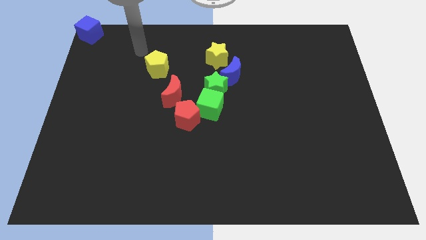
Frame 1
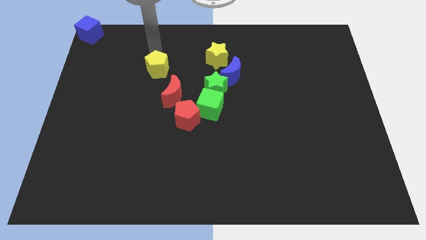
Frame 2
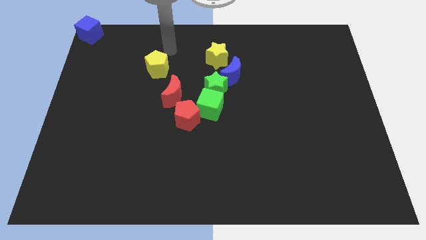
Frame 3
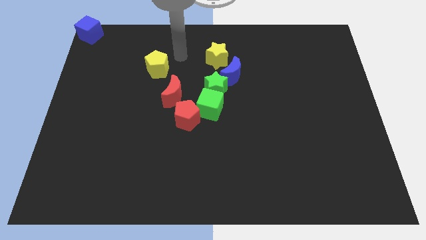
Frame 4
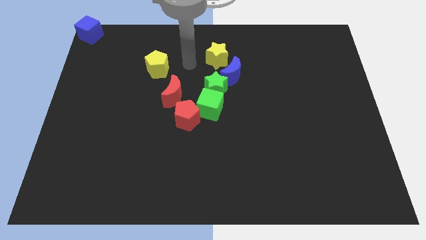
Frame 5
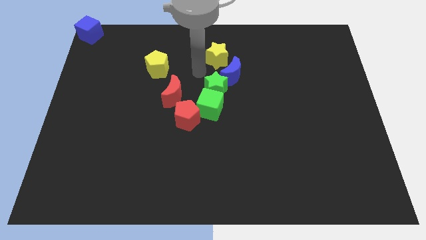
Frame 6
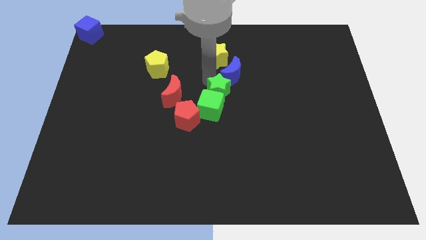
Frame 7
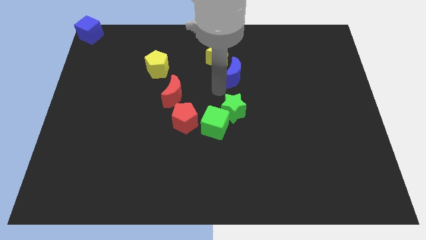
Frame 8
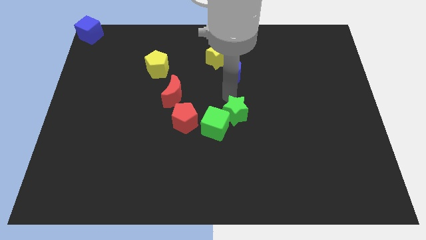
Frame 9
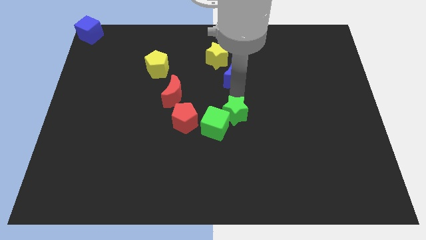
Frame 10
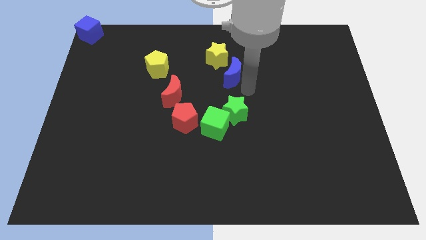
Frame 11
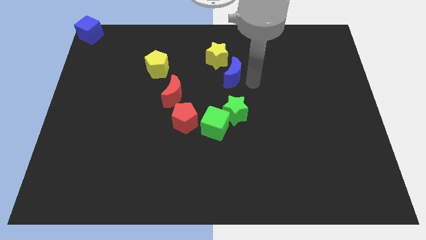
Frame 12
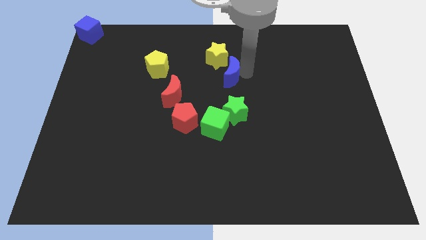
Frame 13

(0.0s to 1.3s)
move the green star towards the bottom

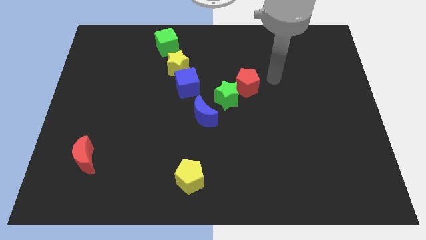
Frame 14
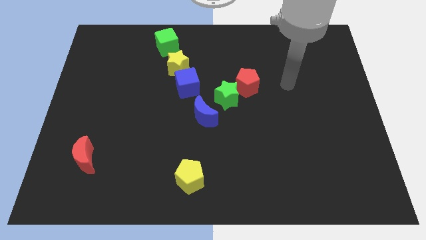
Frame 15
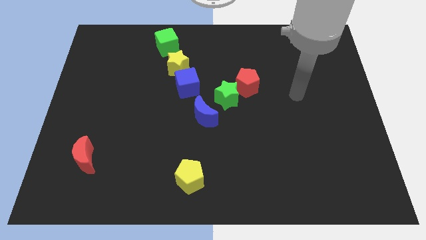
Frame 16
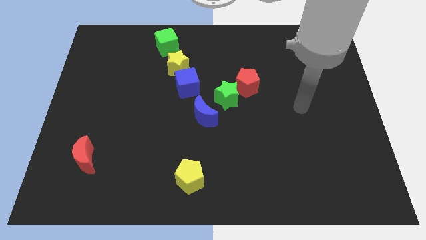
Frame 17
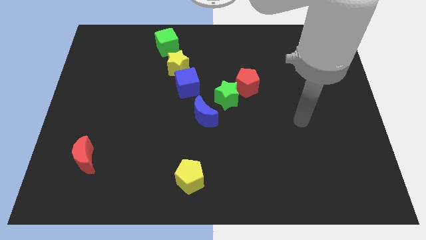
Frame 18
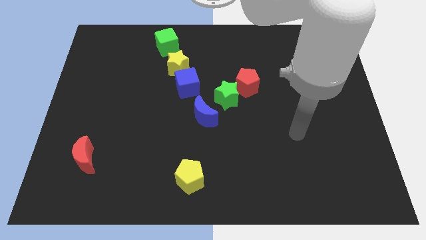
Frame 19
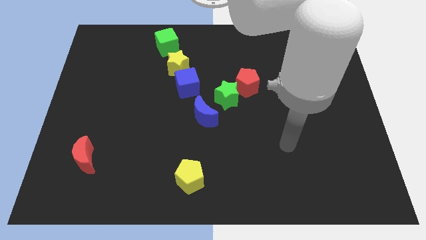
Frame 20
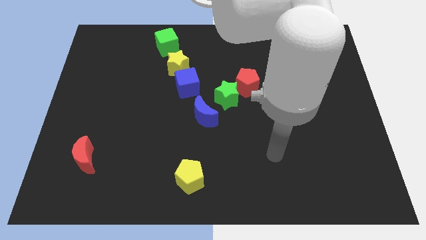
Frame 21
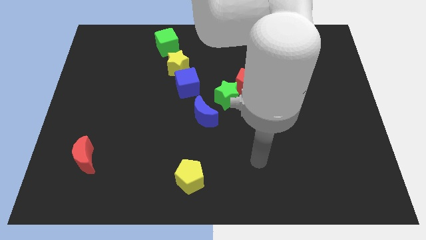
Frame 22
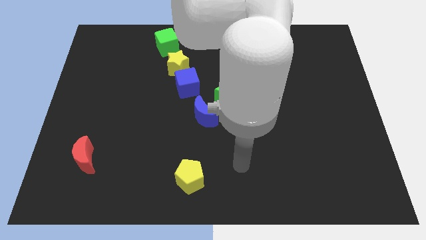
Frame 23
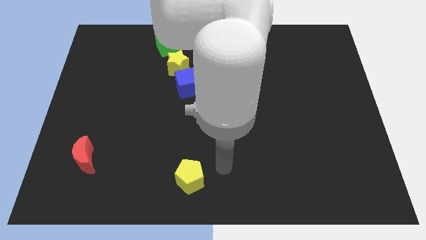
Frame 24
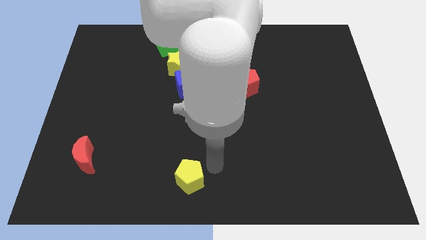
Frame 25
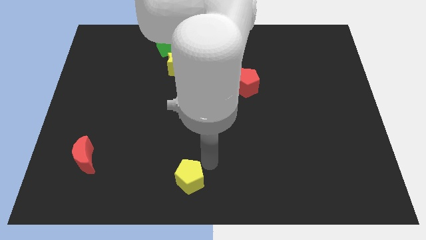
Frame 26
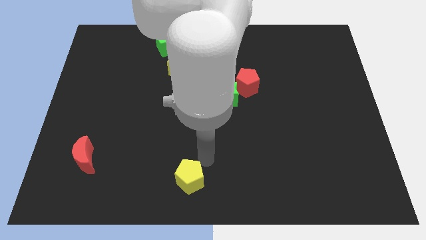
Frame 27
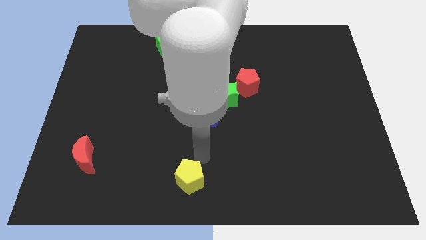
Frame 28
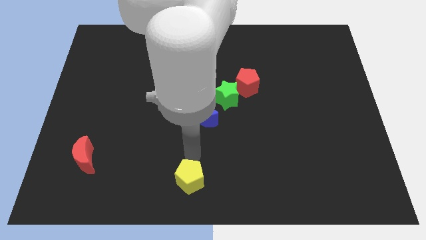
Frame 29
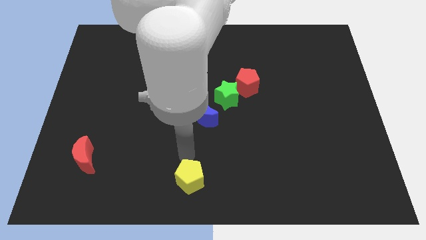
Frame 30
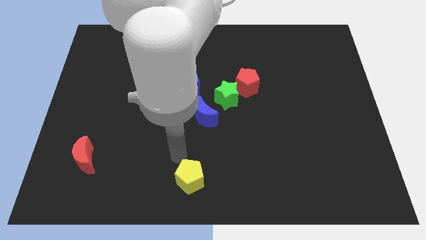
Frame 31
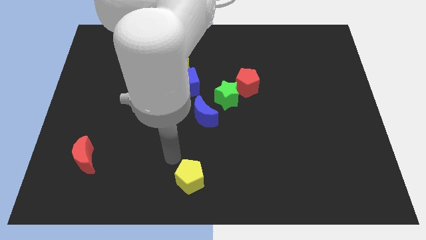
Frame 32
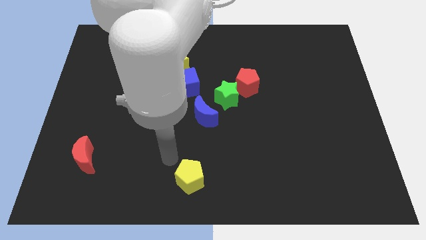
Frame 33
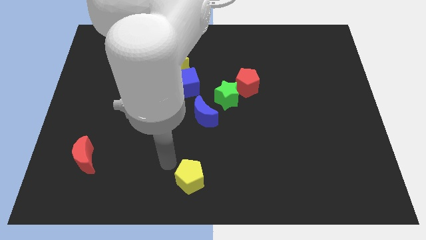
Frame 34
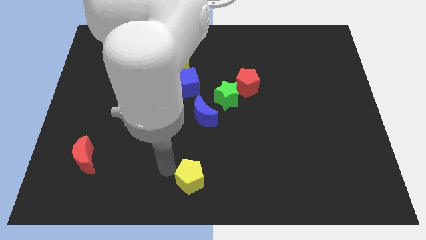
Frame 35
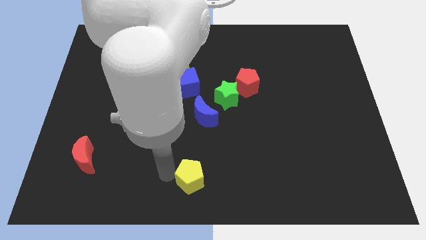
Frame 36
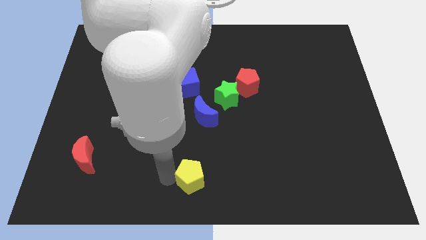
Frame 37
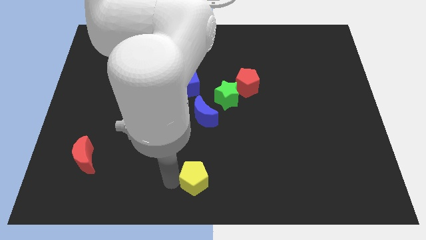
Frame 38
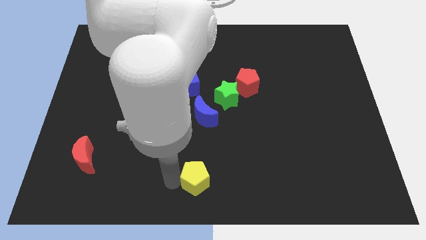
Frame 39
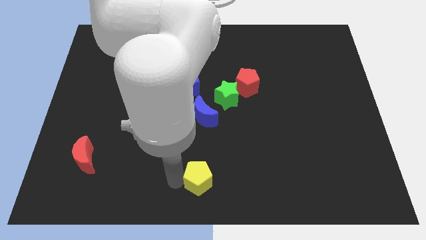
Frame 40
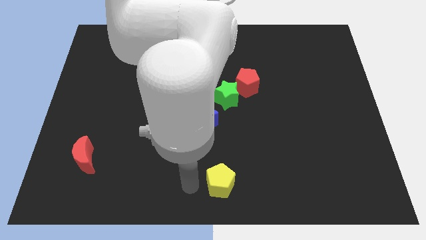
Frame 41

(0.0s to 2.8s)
move the yellow pentagon at the bottom center of the board

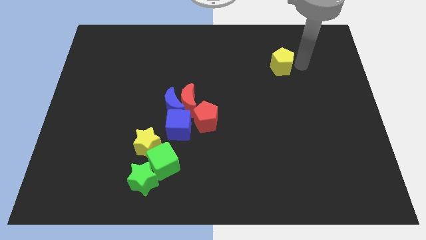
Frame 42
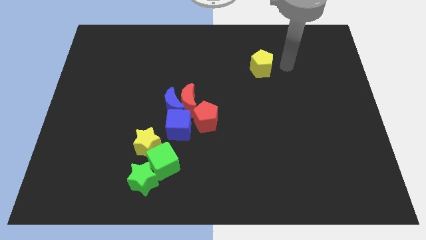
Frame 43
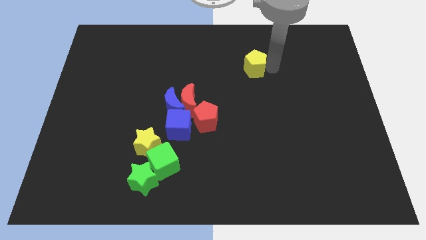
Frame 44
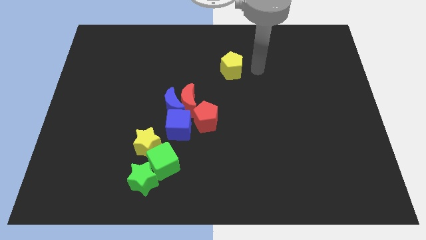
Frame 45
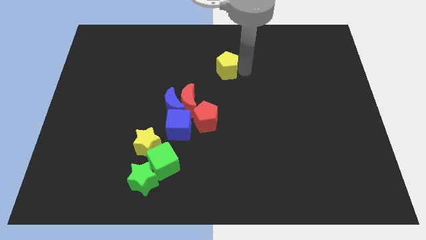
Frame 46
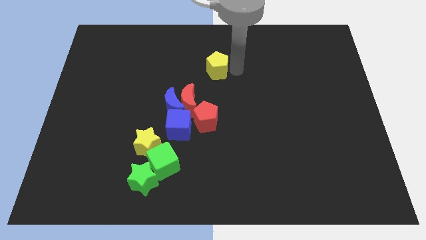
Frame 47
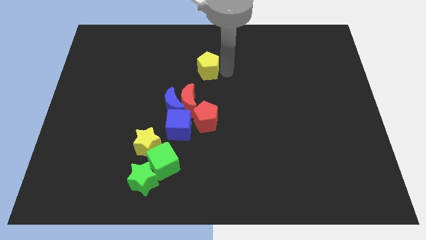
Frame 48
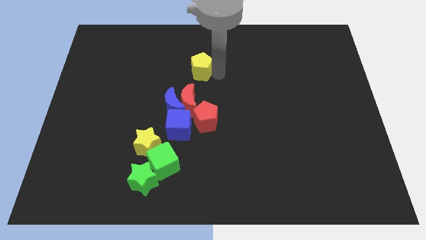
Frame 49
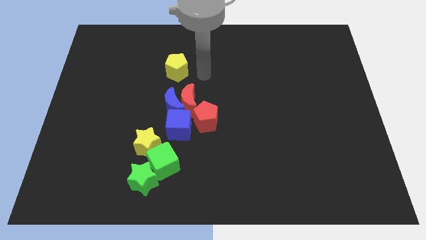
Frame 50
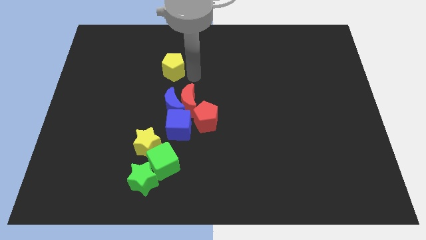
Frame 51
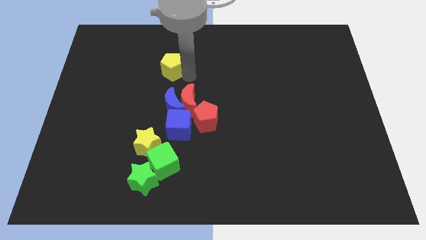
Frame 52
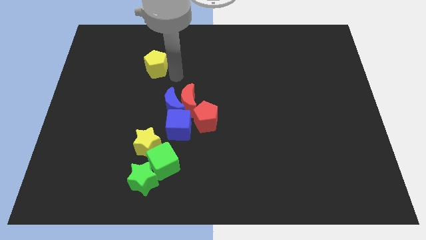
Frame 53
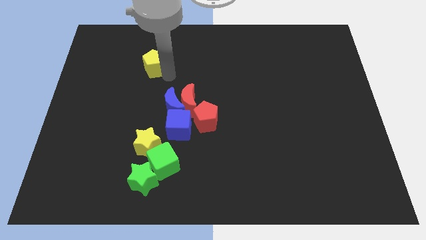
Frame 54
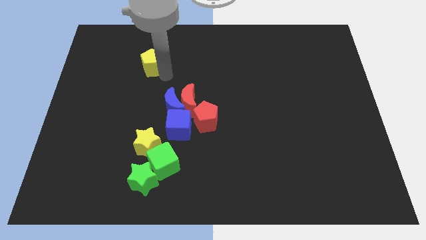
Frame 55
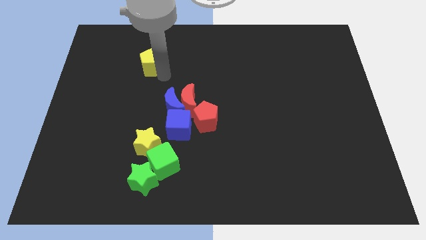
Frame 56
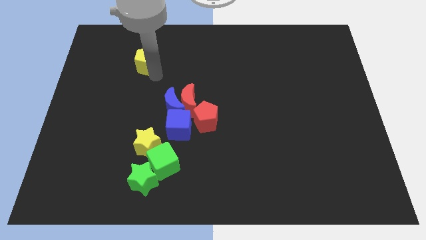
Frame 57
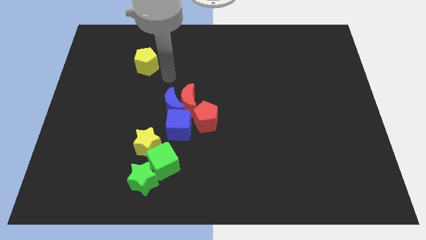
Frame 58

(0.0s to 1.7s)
move the yellow pentagon vertically to the top of the yellow star

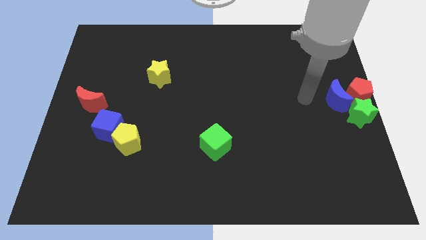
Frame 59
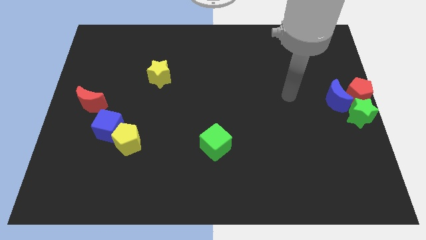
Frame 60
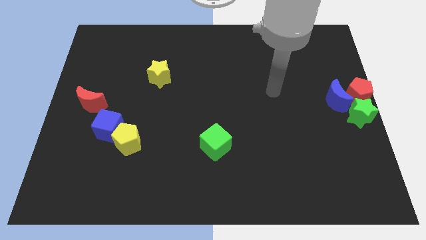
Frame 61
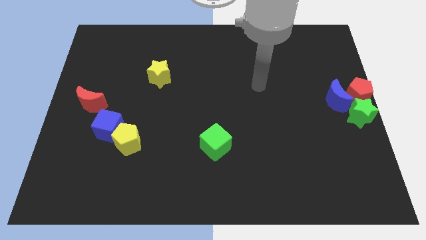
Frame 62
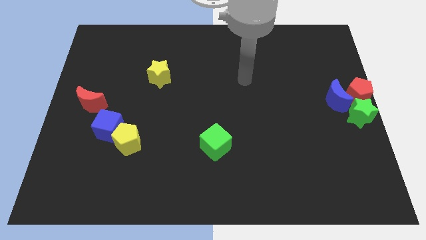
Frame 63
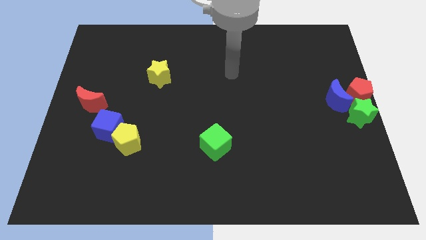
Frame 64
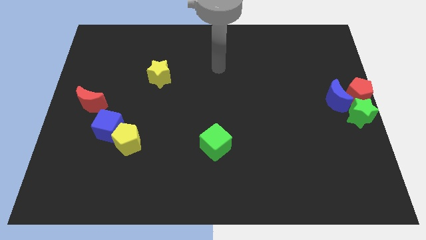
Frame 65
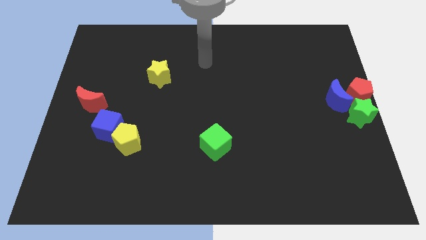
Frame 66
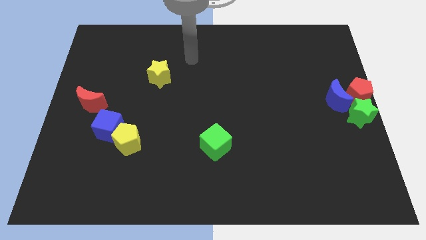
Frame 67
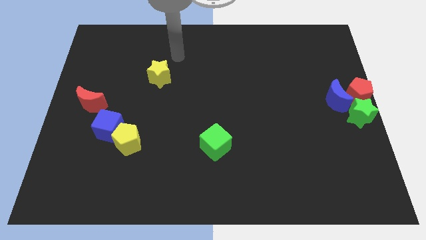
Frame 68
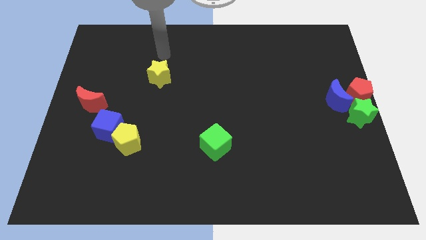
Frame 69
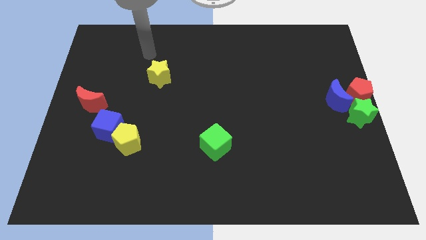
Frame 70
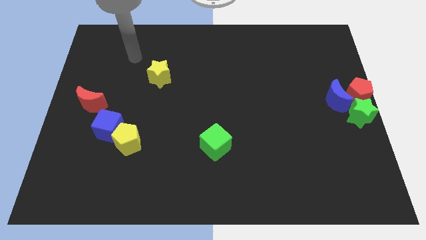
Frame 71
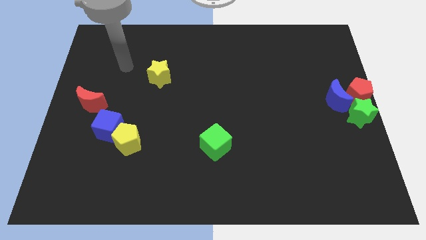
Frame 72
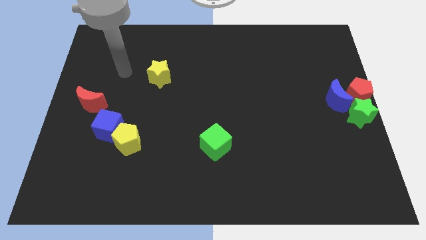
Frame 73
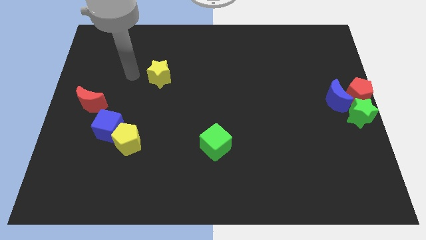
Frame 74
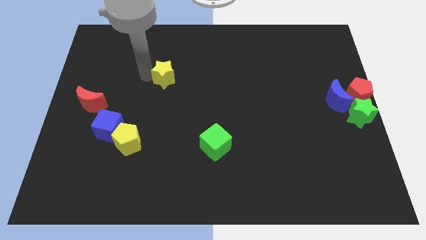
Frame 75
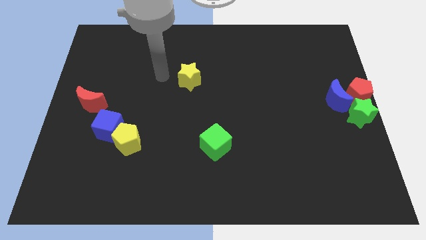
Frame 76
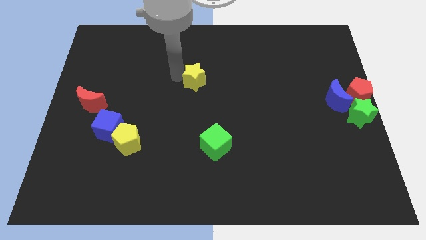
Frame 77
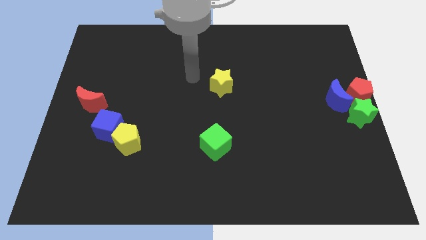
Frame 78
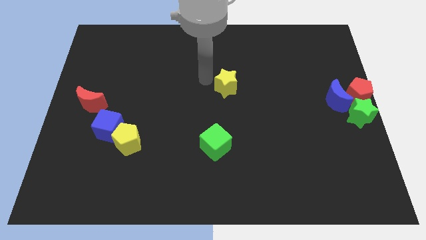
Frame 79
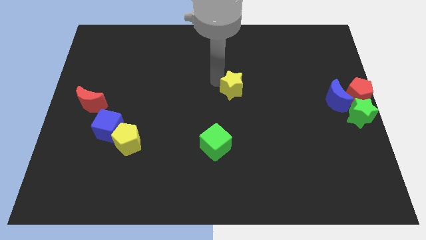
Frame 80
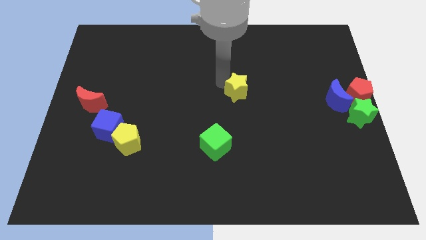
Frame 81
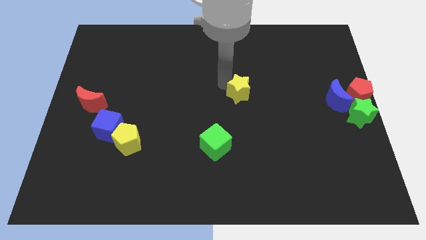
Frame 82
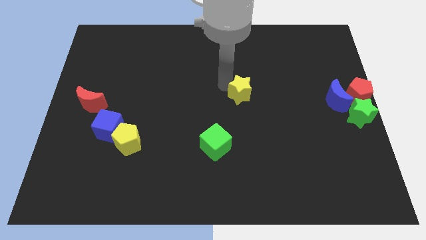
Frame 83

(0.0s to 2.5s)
place yellow star to the center of the board

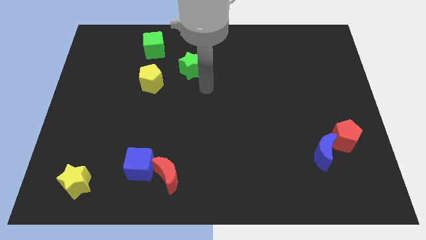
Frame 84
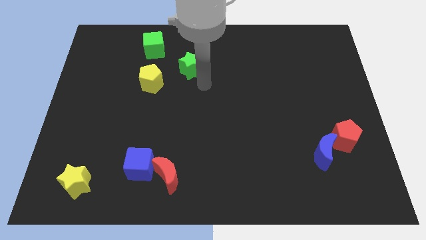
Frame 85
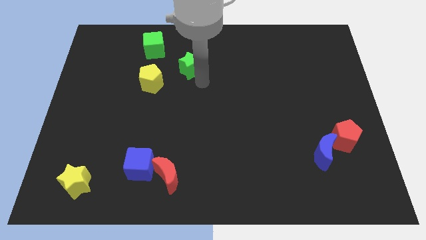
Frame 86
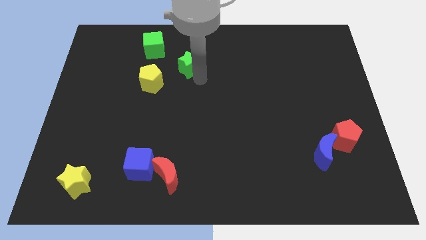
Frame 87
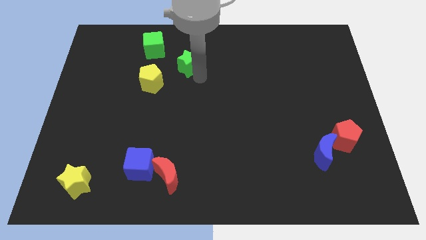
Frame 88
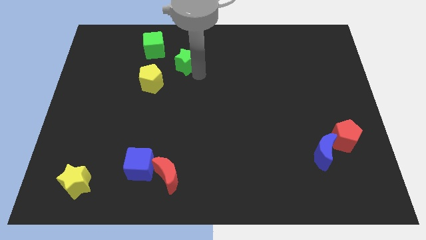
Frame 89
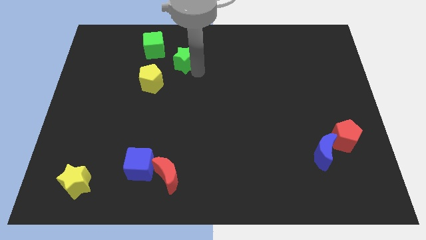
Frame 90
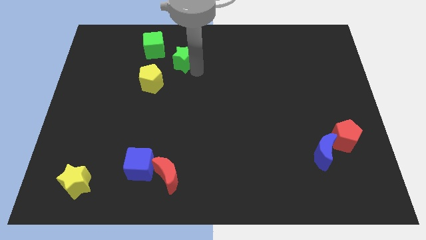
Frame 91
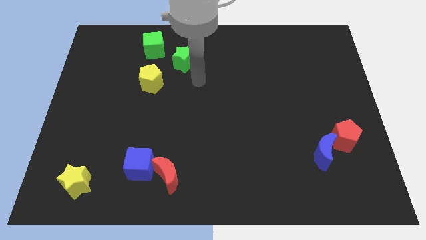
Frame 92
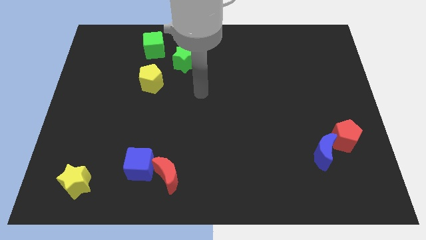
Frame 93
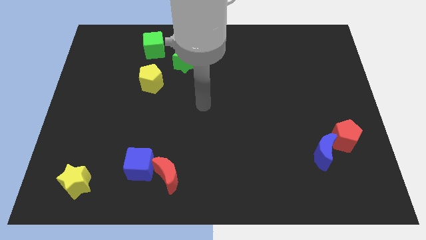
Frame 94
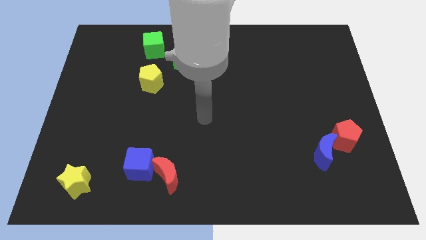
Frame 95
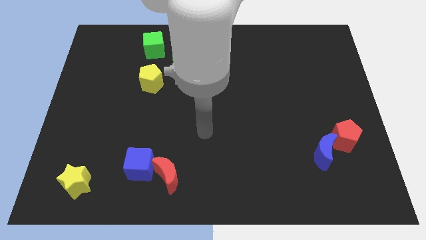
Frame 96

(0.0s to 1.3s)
place green star diagonal to green cube
